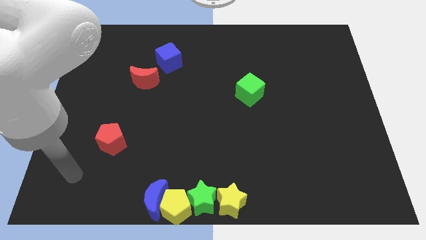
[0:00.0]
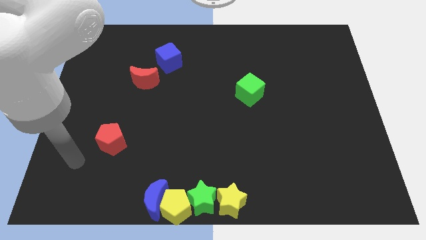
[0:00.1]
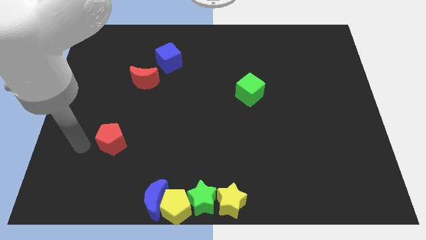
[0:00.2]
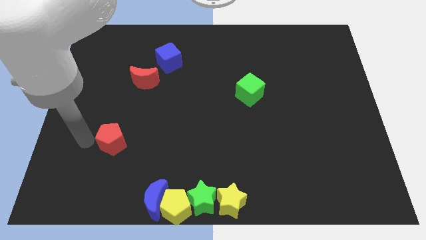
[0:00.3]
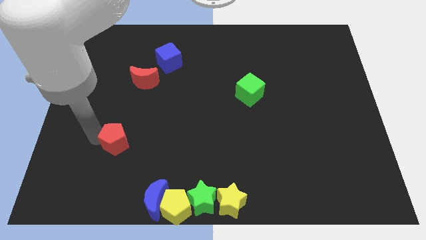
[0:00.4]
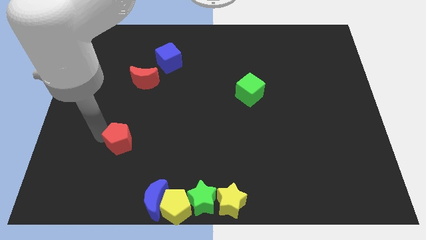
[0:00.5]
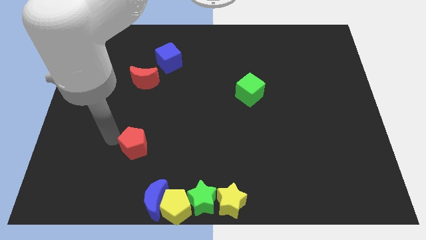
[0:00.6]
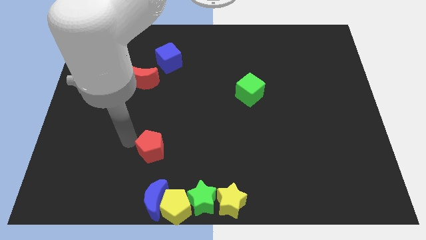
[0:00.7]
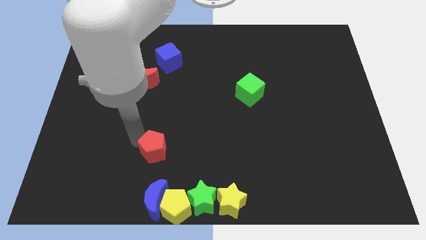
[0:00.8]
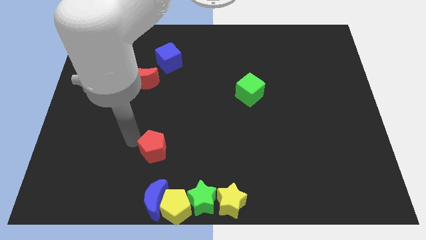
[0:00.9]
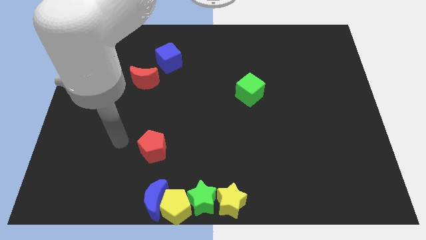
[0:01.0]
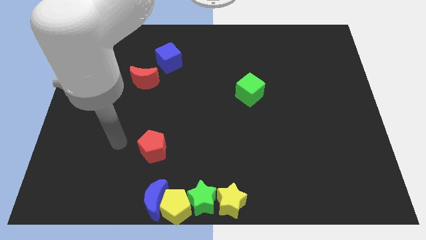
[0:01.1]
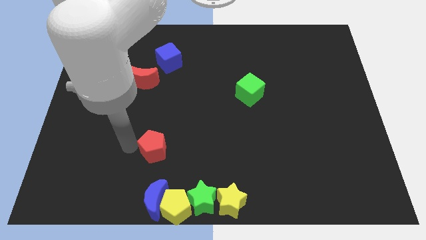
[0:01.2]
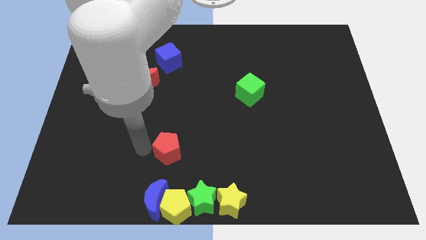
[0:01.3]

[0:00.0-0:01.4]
place the red pentagon above the blue moon

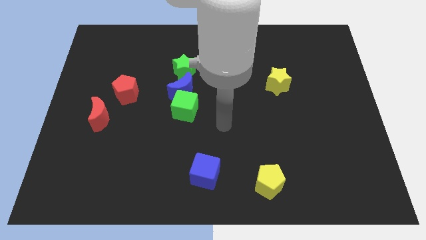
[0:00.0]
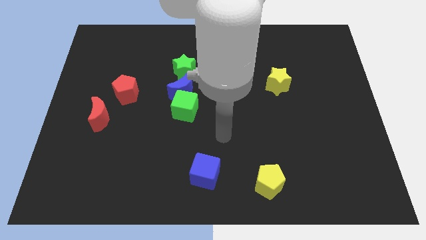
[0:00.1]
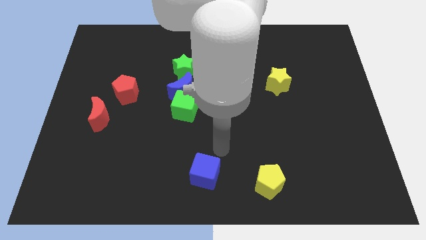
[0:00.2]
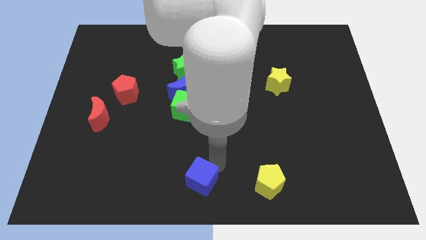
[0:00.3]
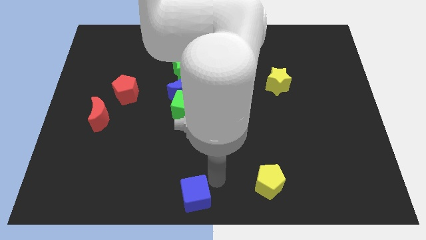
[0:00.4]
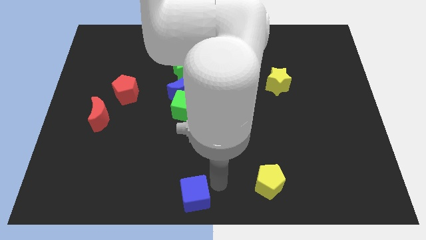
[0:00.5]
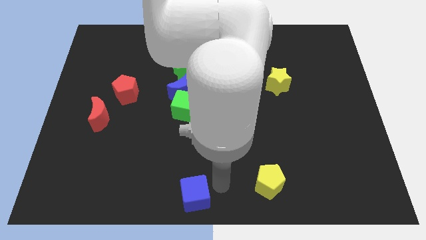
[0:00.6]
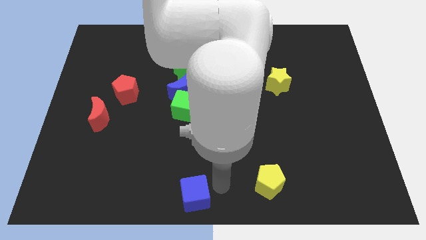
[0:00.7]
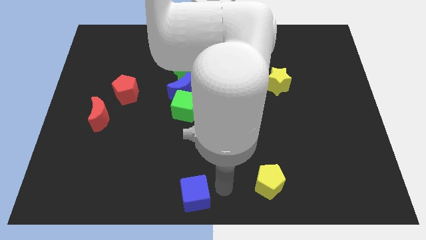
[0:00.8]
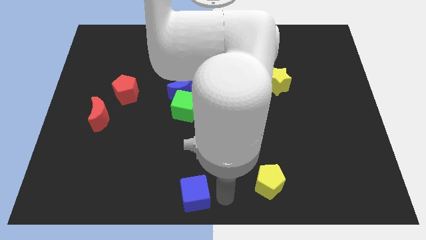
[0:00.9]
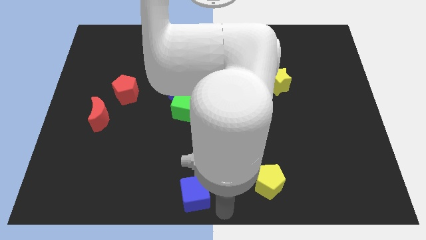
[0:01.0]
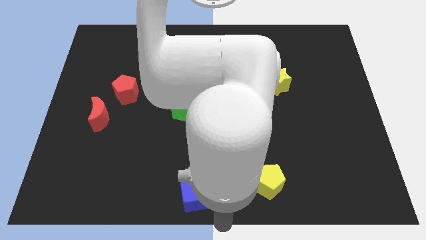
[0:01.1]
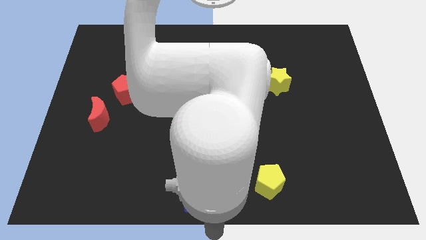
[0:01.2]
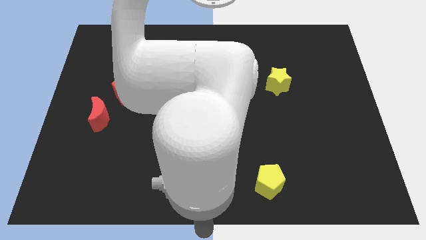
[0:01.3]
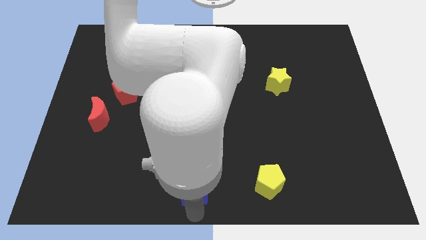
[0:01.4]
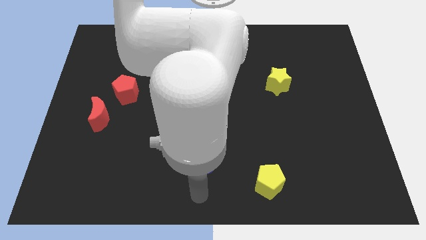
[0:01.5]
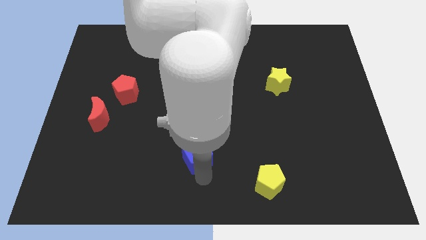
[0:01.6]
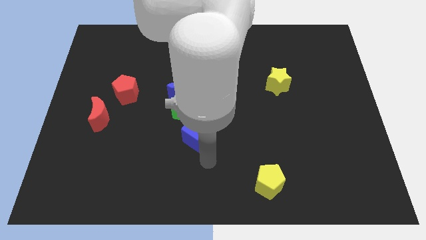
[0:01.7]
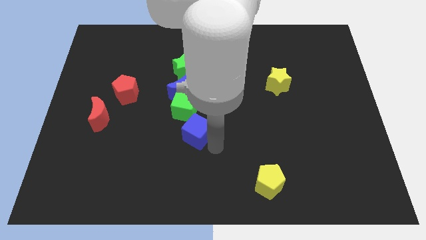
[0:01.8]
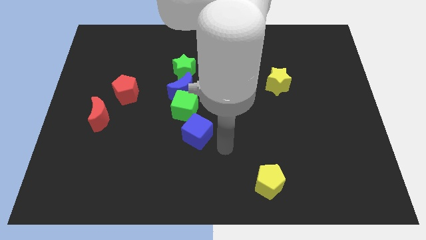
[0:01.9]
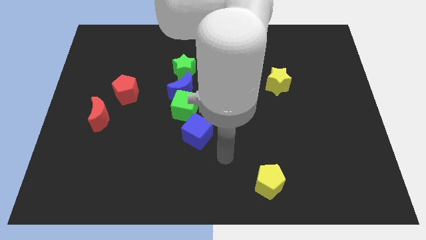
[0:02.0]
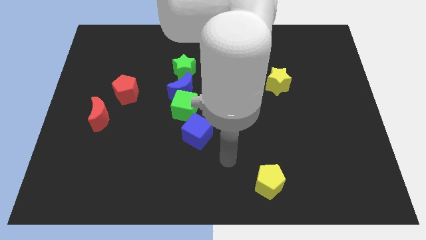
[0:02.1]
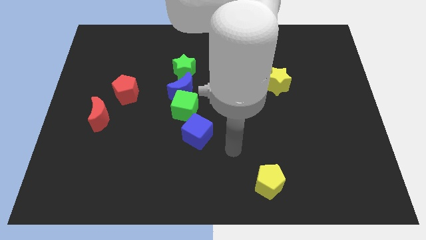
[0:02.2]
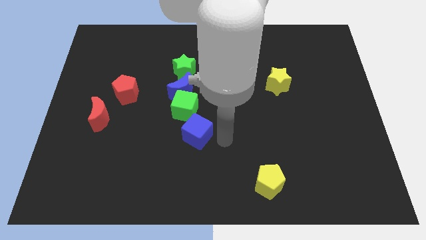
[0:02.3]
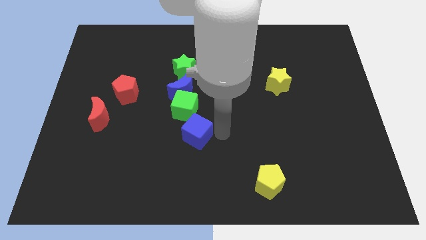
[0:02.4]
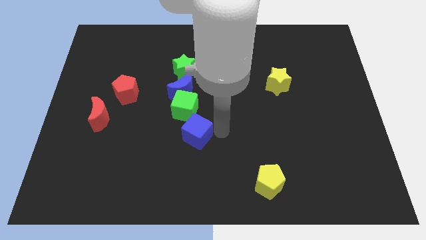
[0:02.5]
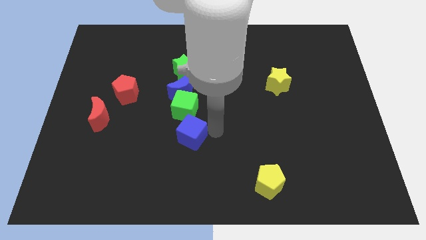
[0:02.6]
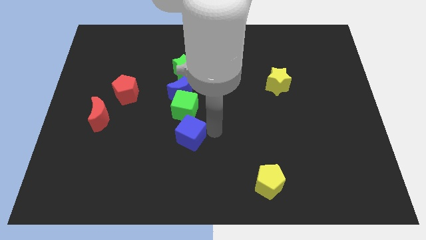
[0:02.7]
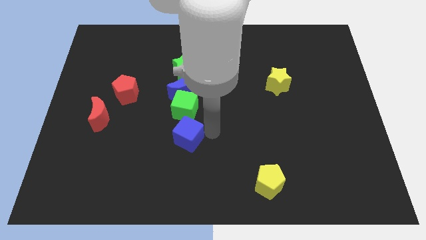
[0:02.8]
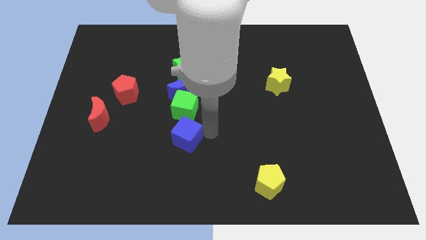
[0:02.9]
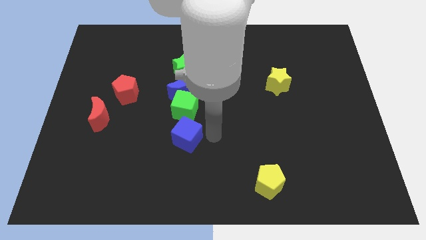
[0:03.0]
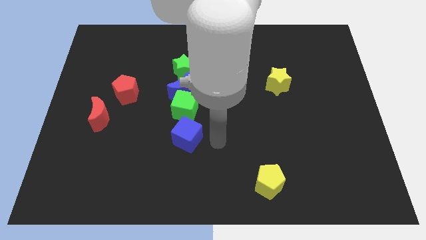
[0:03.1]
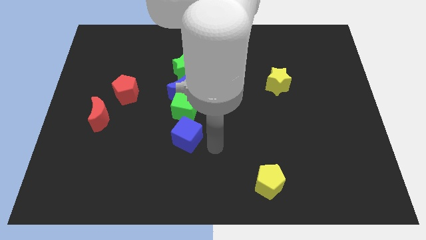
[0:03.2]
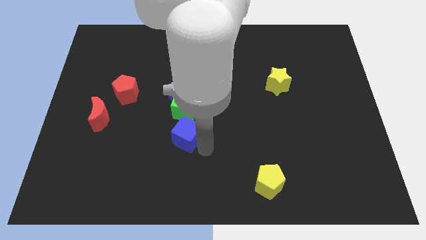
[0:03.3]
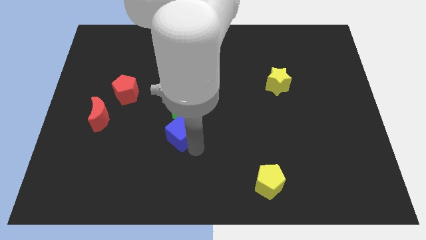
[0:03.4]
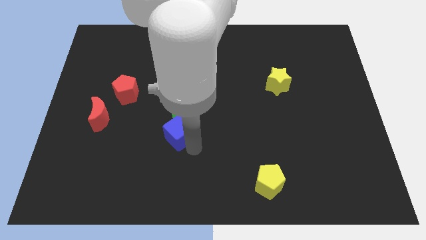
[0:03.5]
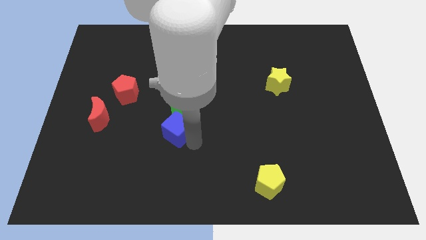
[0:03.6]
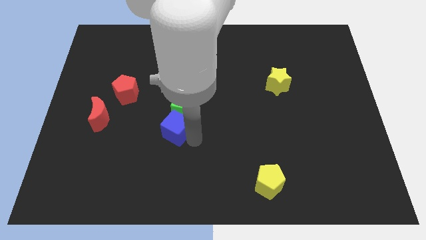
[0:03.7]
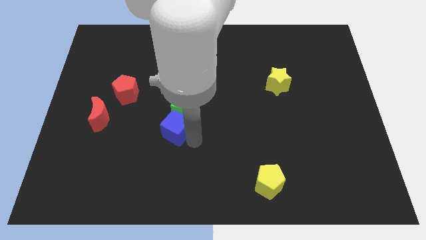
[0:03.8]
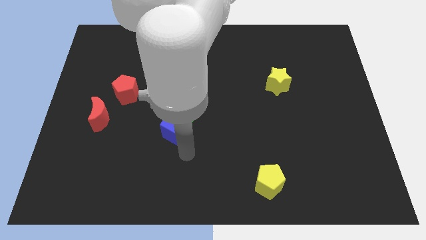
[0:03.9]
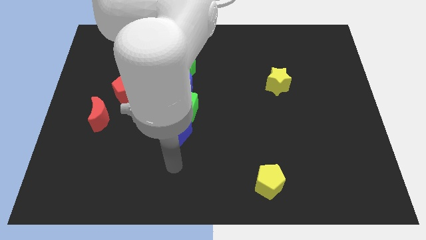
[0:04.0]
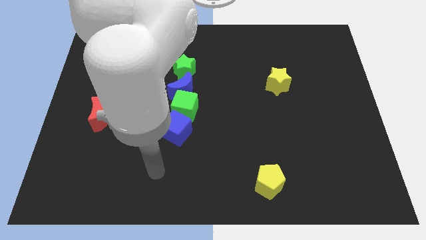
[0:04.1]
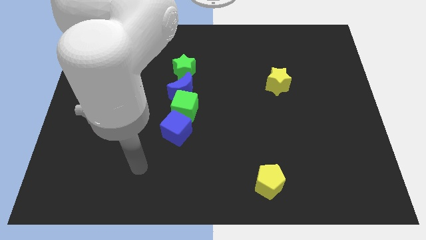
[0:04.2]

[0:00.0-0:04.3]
put the blue cube below the green cube

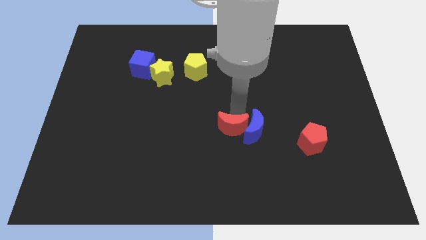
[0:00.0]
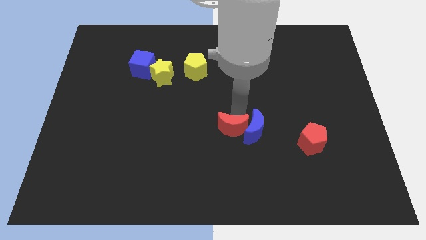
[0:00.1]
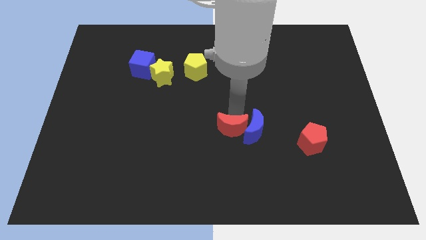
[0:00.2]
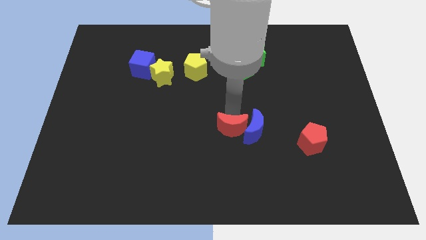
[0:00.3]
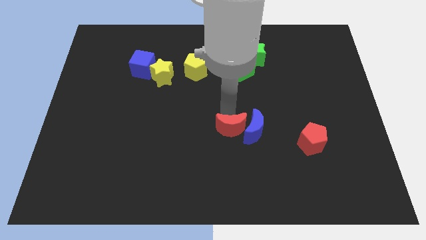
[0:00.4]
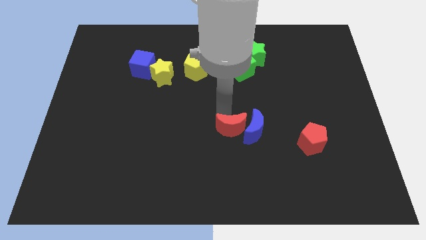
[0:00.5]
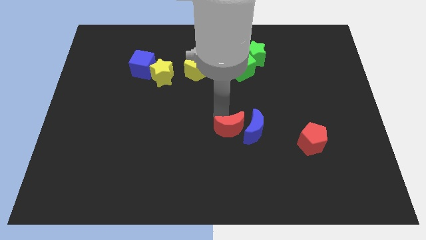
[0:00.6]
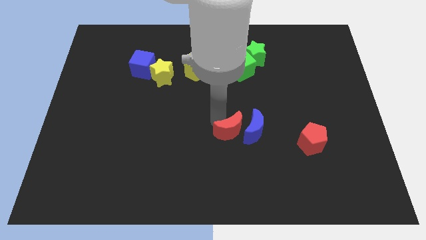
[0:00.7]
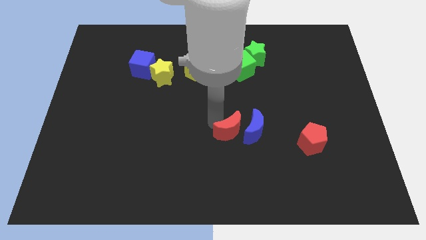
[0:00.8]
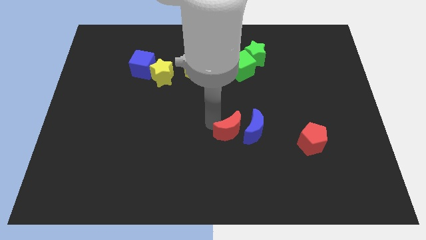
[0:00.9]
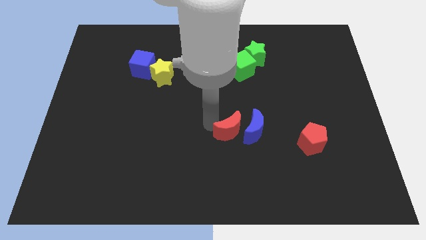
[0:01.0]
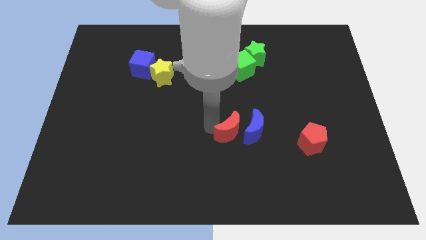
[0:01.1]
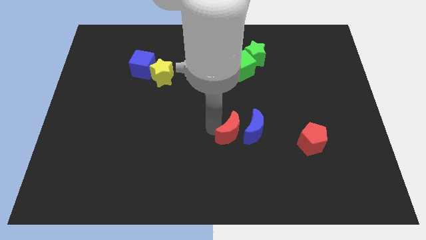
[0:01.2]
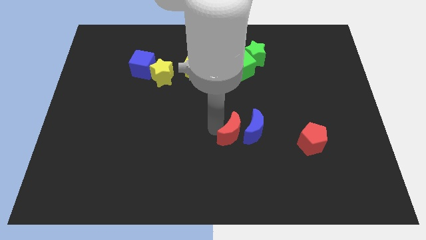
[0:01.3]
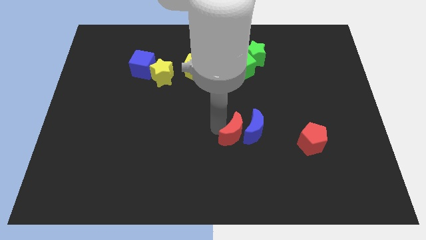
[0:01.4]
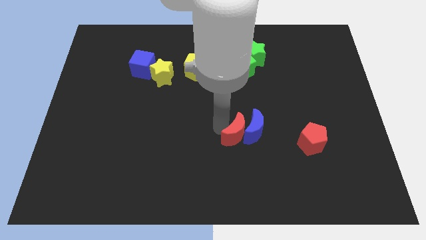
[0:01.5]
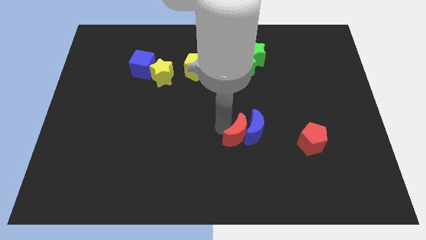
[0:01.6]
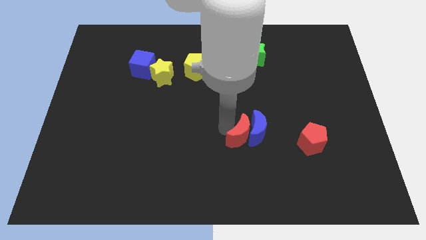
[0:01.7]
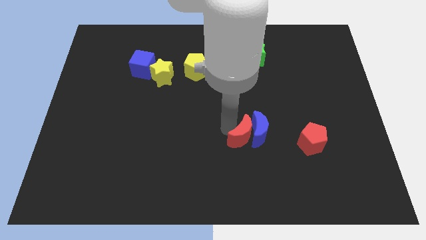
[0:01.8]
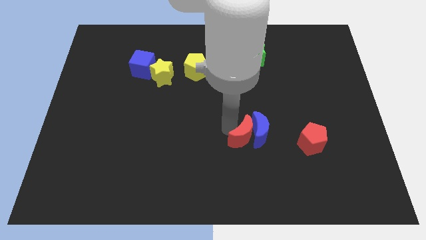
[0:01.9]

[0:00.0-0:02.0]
slightly push the red crescent with the blue crescent towards the right of the board

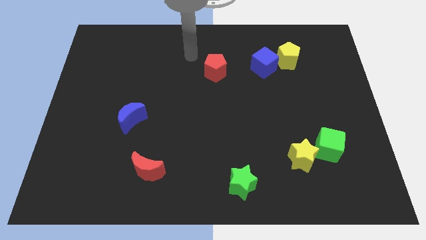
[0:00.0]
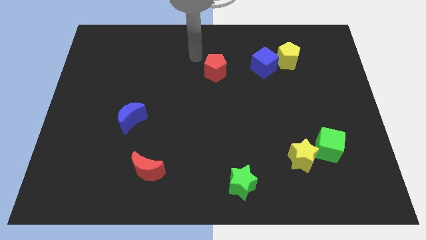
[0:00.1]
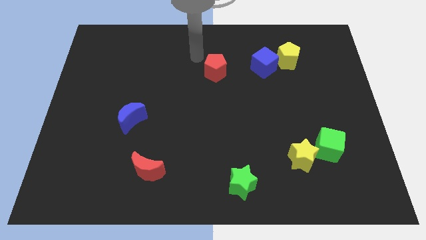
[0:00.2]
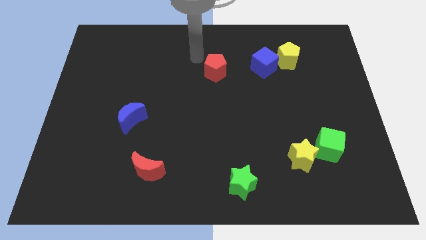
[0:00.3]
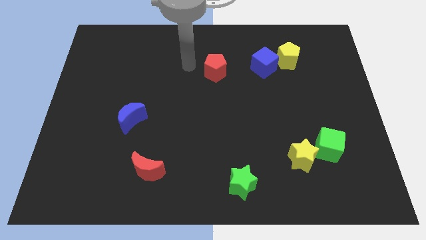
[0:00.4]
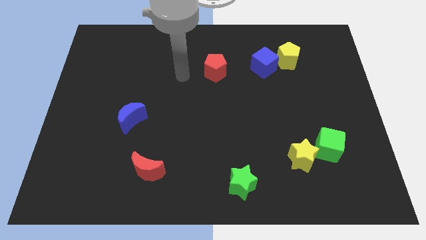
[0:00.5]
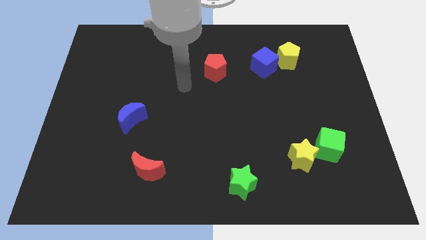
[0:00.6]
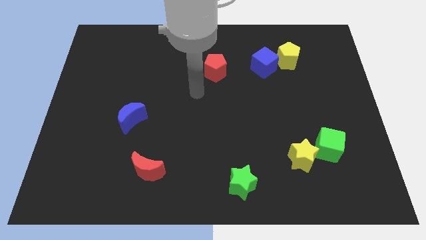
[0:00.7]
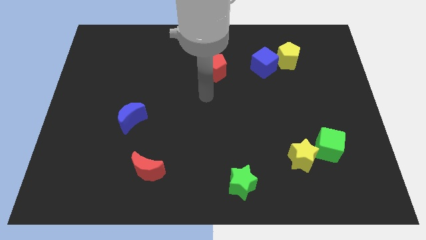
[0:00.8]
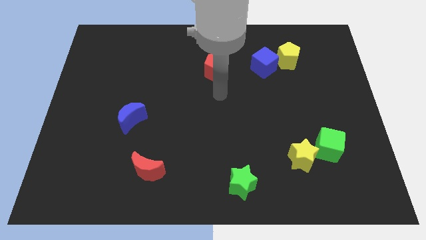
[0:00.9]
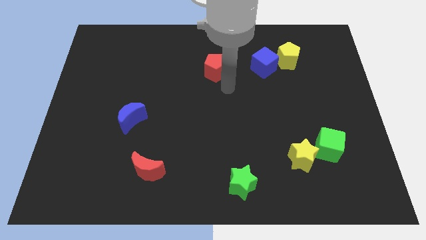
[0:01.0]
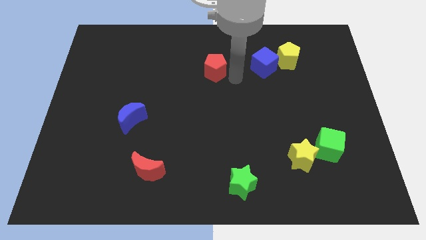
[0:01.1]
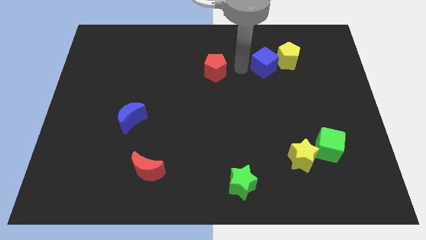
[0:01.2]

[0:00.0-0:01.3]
place your arm in between the red pentagon and blue cube
